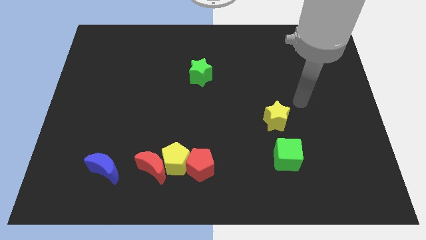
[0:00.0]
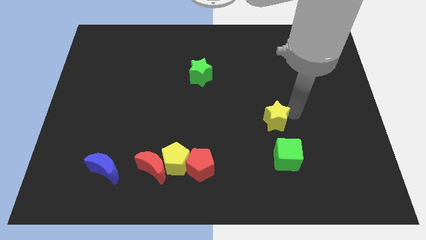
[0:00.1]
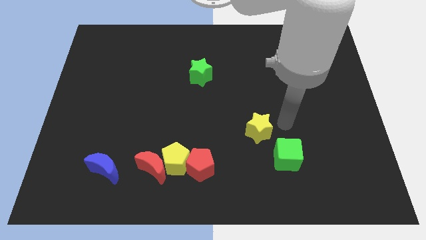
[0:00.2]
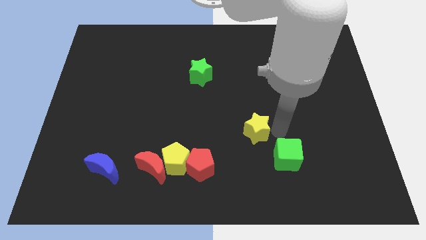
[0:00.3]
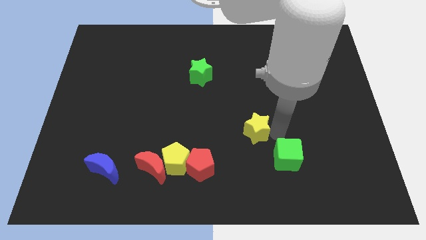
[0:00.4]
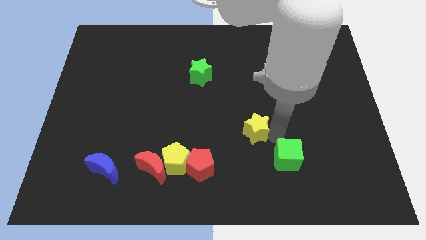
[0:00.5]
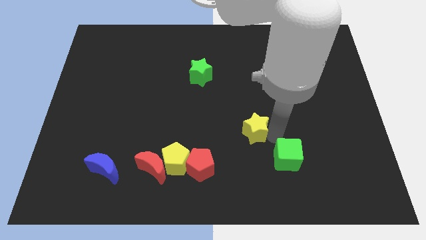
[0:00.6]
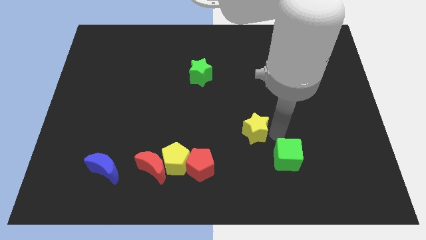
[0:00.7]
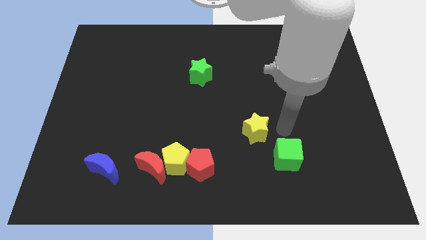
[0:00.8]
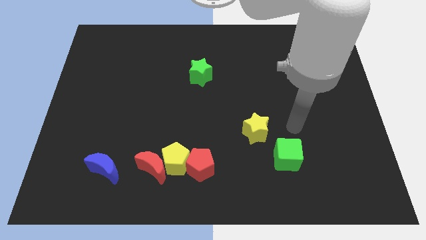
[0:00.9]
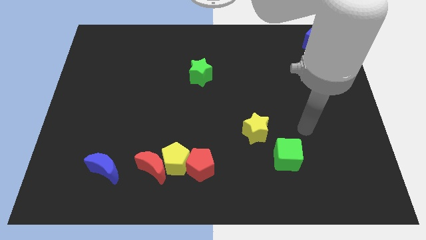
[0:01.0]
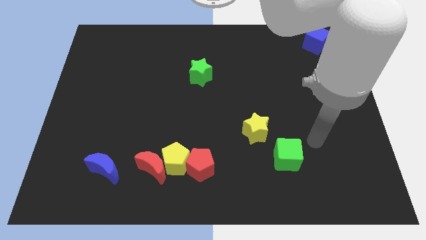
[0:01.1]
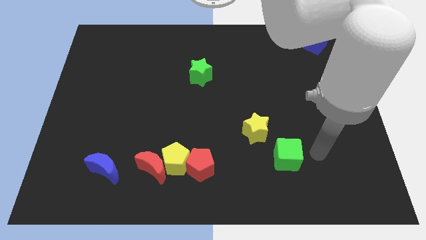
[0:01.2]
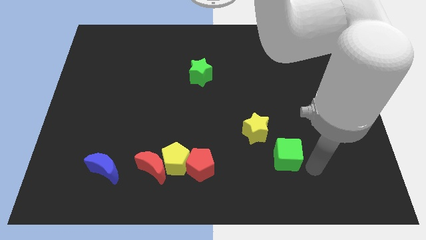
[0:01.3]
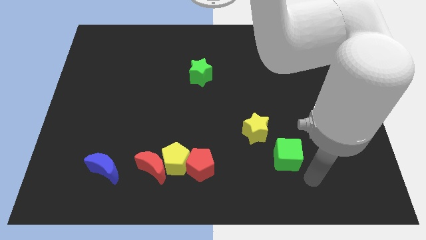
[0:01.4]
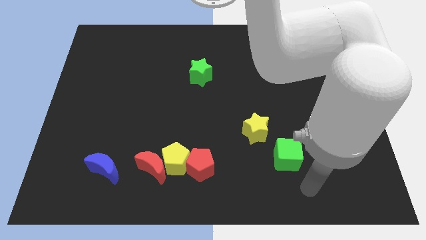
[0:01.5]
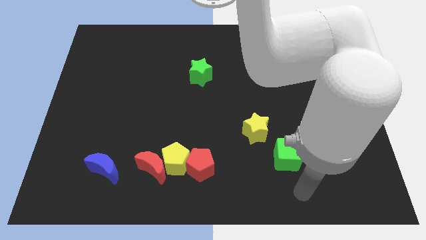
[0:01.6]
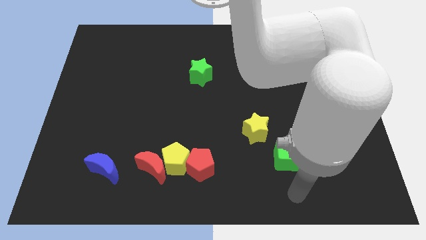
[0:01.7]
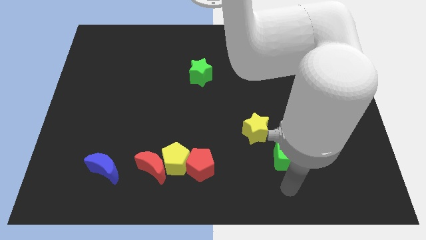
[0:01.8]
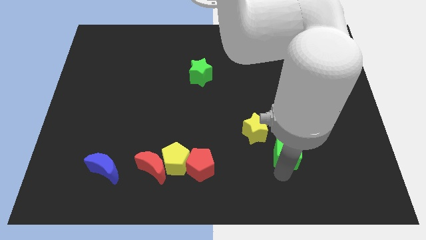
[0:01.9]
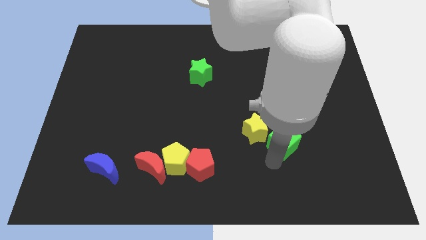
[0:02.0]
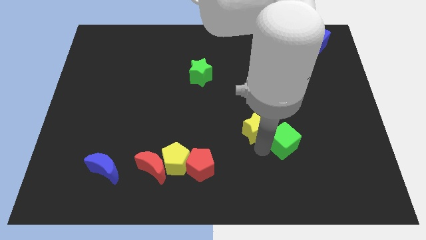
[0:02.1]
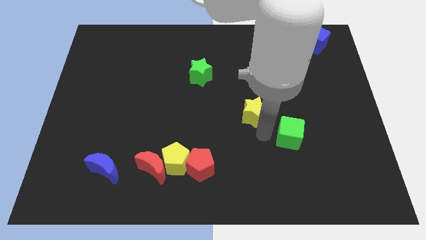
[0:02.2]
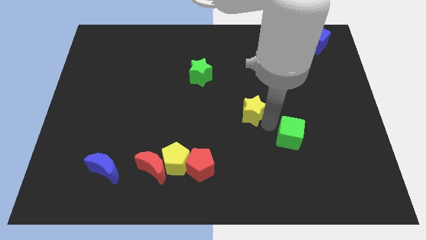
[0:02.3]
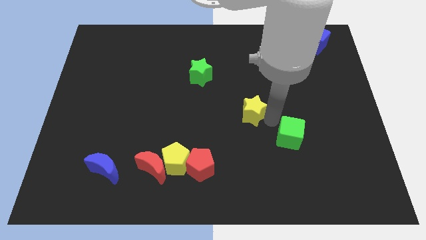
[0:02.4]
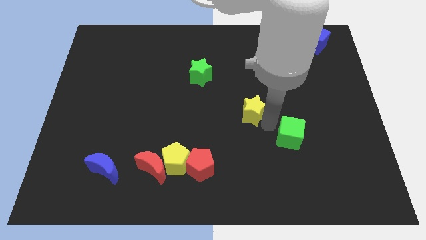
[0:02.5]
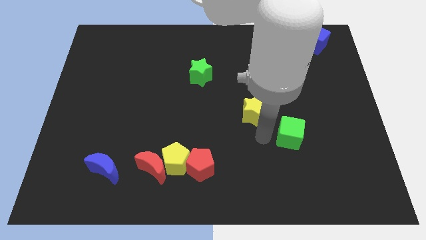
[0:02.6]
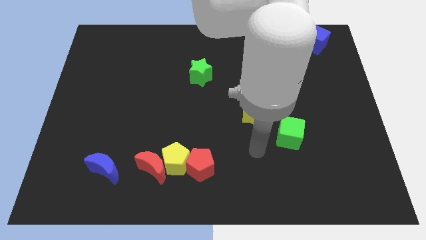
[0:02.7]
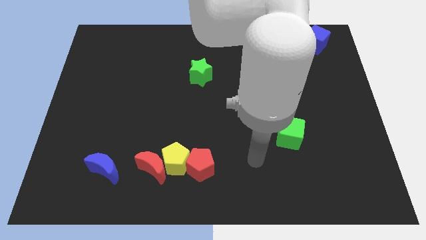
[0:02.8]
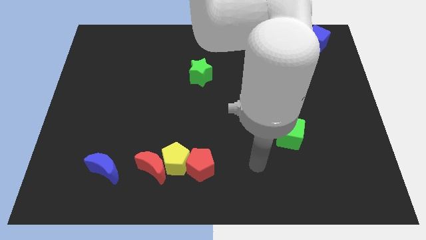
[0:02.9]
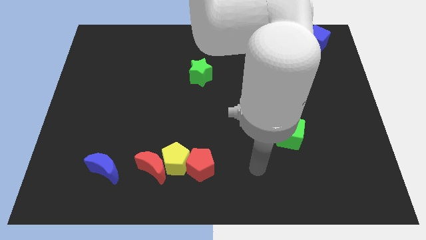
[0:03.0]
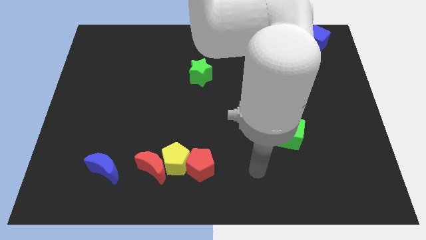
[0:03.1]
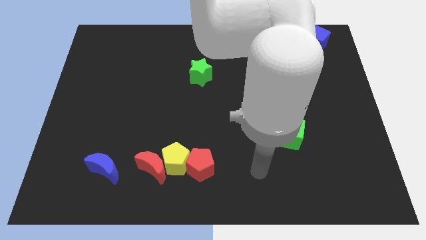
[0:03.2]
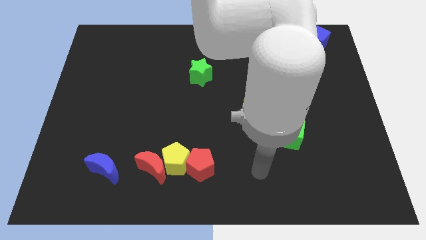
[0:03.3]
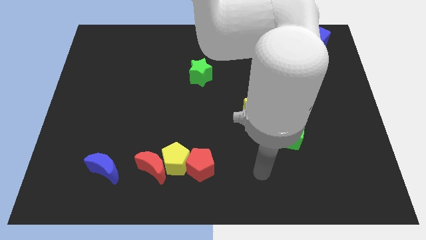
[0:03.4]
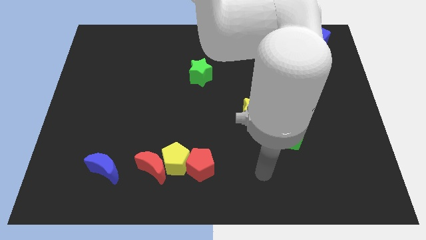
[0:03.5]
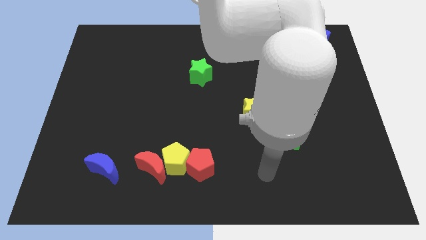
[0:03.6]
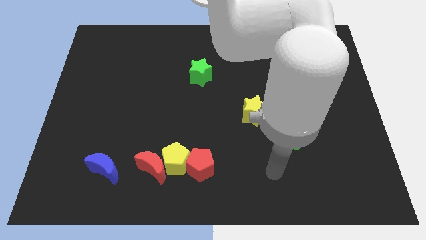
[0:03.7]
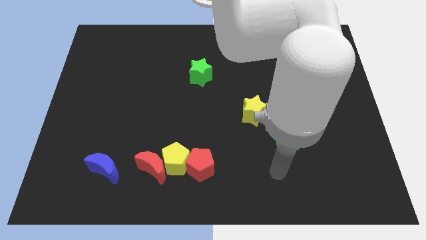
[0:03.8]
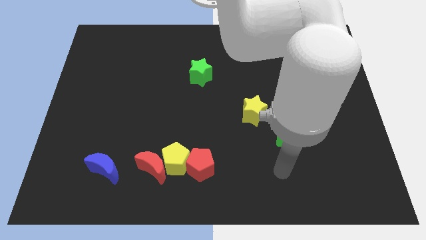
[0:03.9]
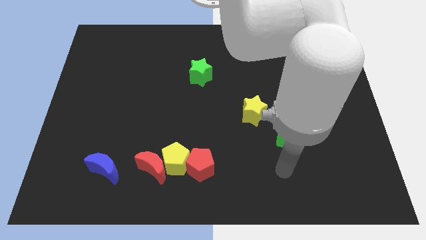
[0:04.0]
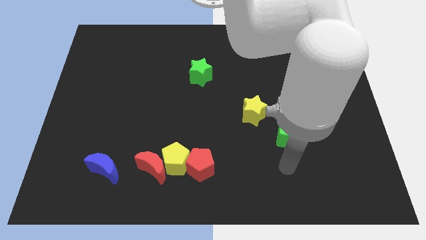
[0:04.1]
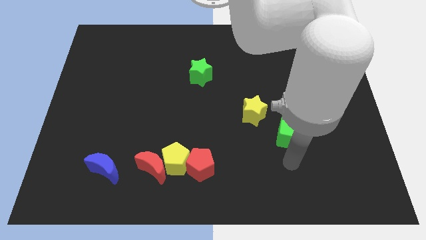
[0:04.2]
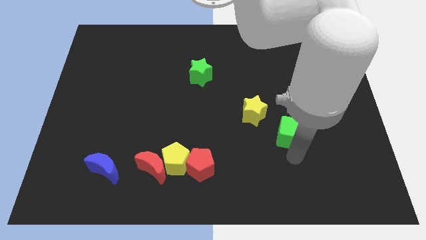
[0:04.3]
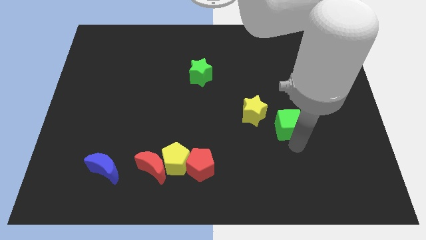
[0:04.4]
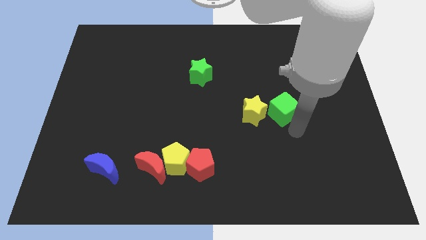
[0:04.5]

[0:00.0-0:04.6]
move green cube to the right of yellow star

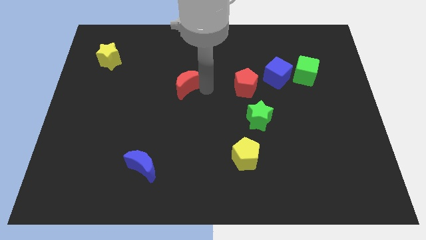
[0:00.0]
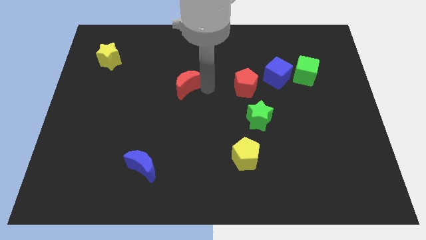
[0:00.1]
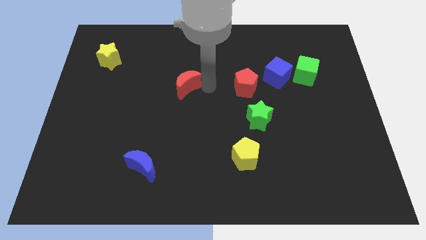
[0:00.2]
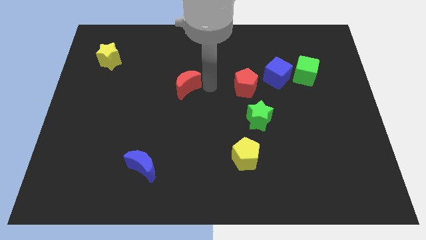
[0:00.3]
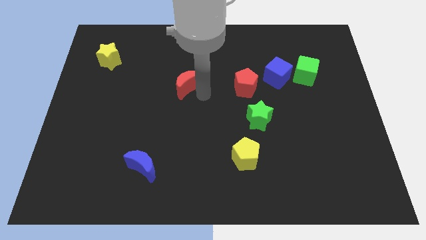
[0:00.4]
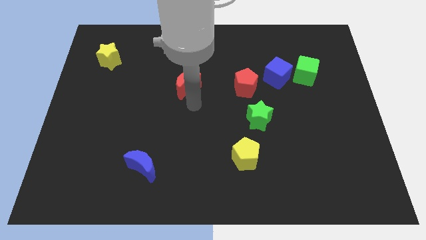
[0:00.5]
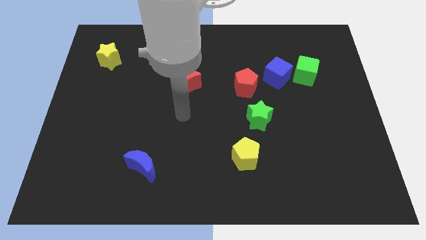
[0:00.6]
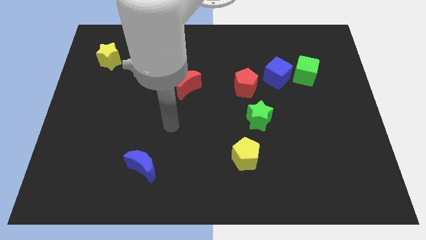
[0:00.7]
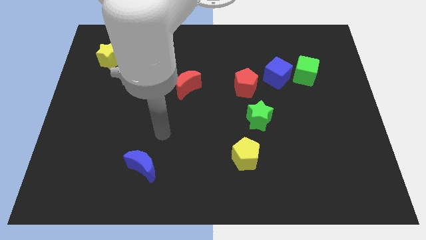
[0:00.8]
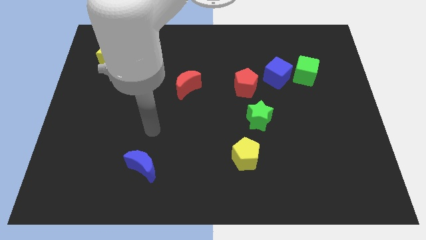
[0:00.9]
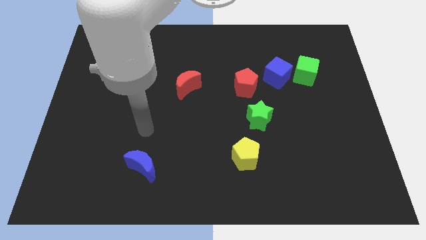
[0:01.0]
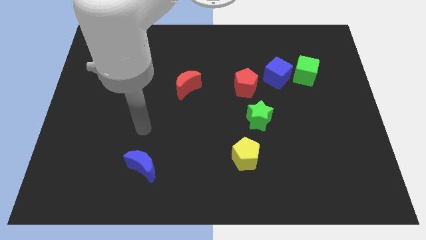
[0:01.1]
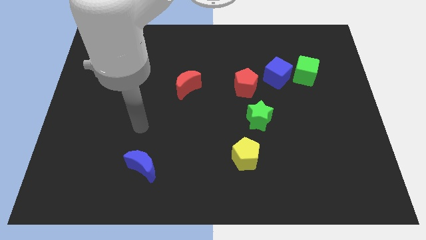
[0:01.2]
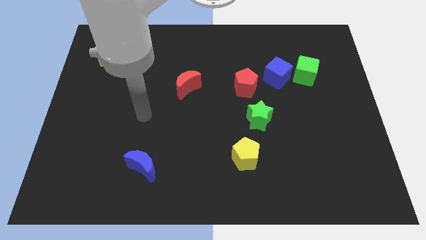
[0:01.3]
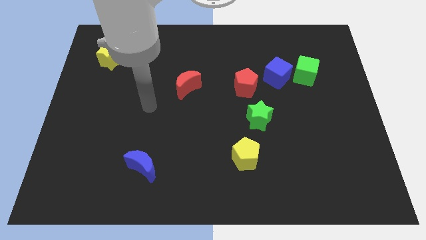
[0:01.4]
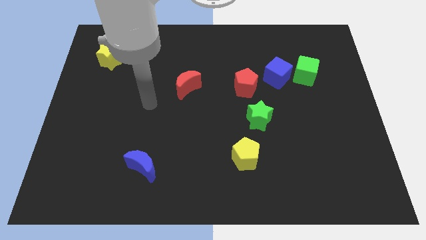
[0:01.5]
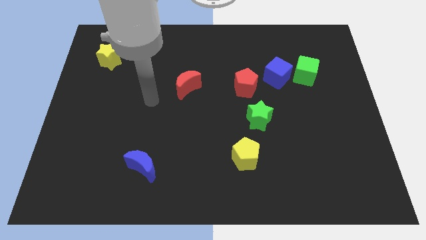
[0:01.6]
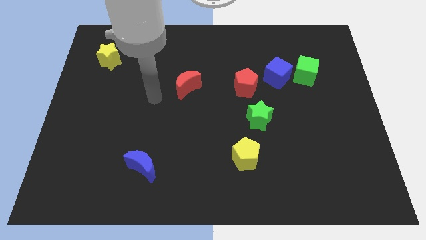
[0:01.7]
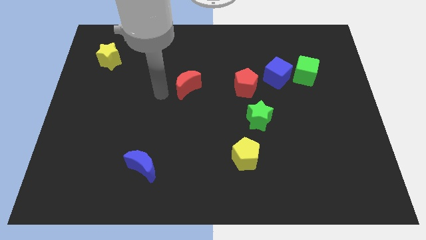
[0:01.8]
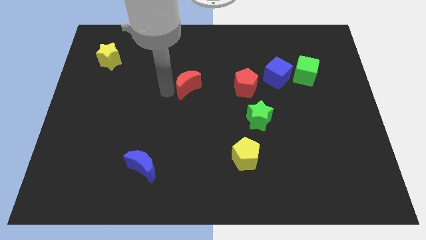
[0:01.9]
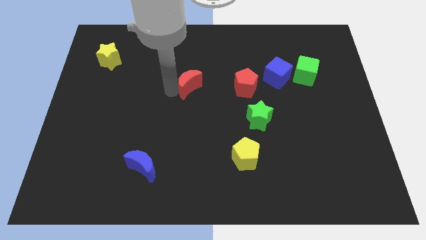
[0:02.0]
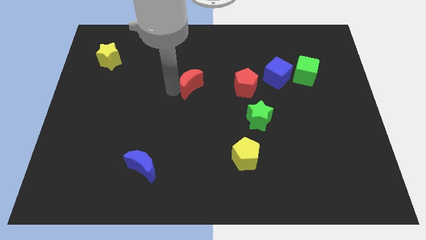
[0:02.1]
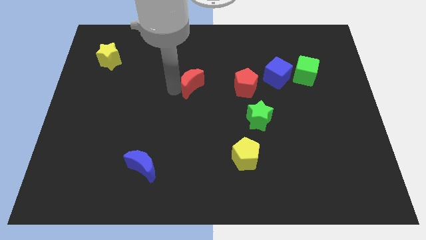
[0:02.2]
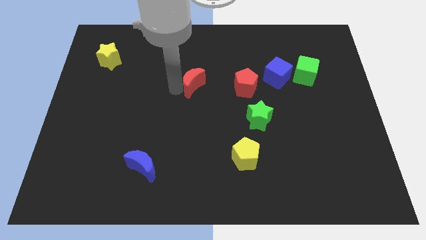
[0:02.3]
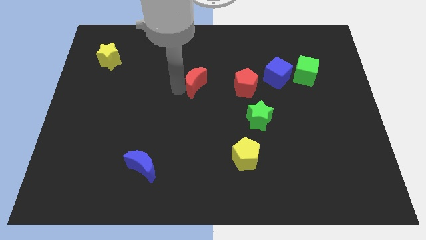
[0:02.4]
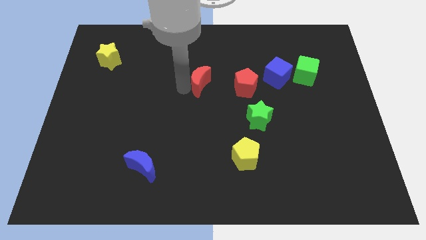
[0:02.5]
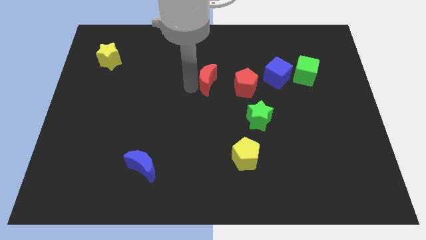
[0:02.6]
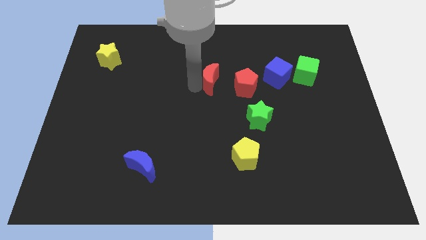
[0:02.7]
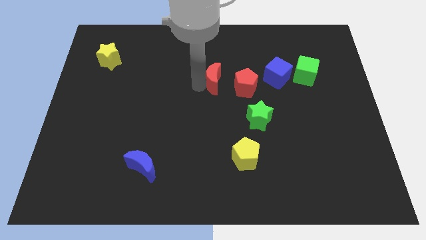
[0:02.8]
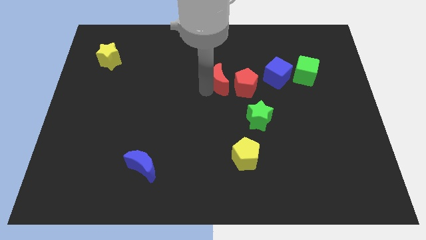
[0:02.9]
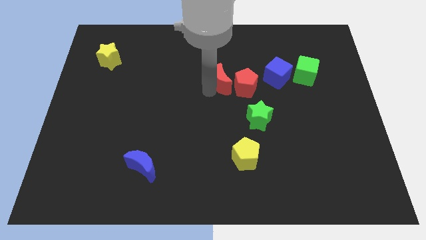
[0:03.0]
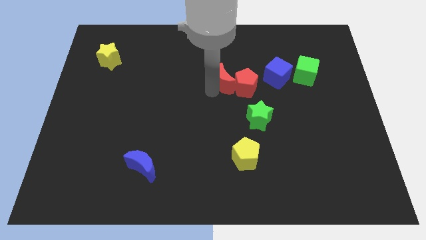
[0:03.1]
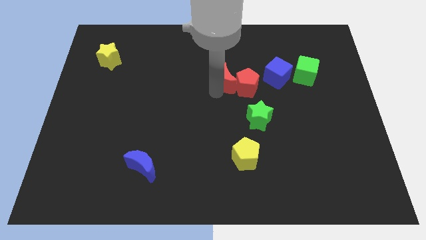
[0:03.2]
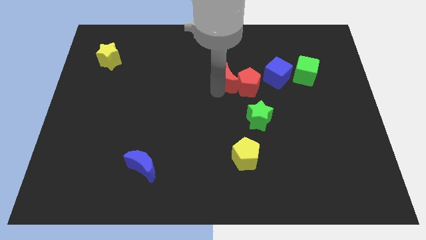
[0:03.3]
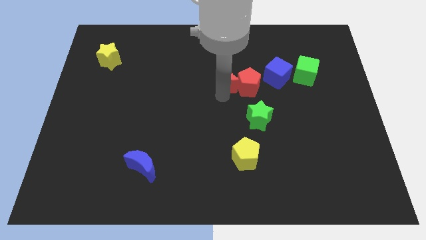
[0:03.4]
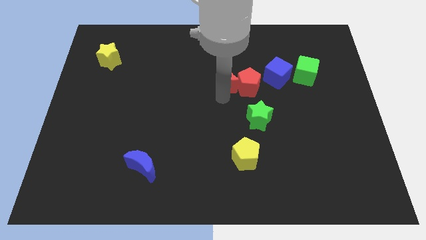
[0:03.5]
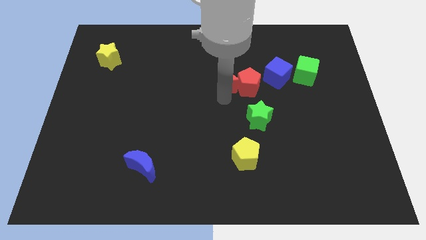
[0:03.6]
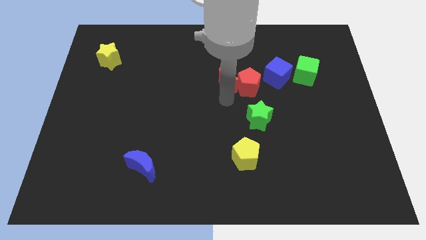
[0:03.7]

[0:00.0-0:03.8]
push the red crescent into the left of the red pentagon

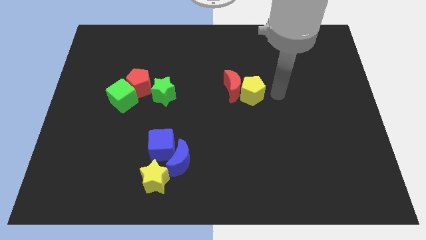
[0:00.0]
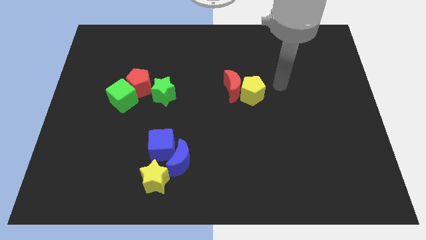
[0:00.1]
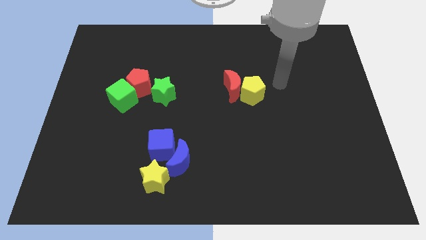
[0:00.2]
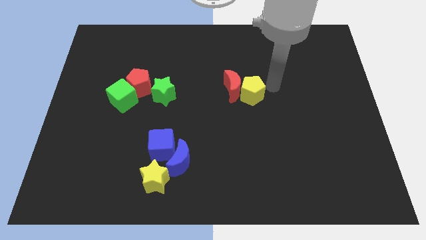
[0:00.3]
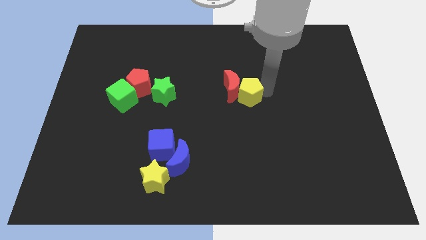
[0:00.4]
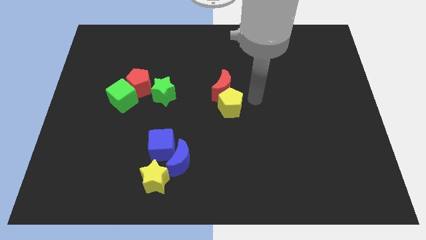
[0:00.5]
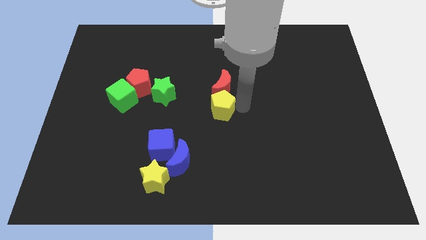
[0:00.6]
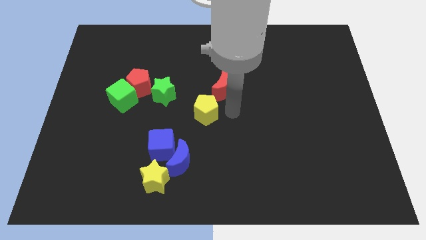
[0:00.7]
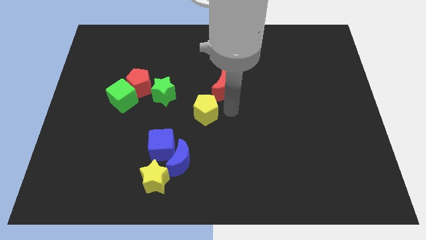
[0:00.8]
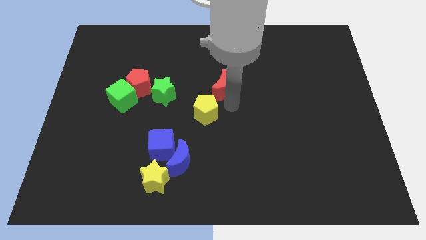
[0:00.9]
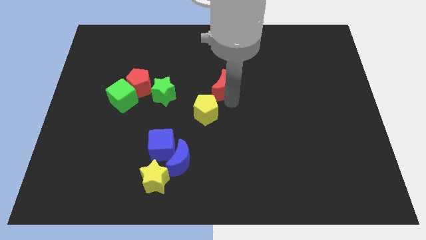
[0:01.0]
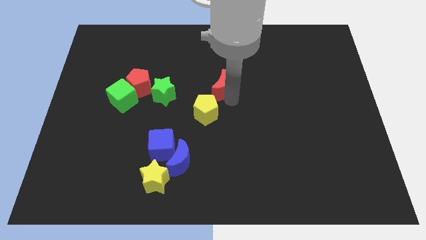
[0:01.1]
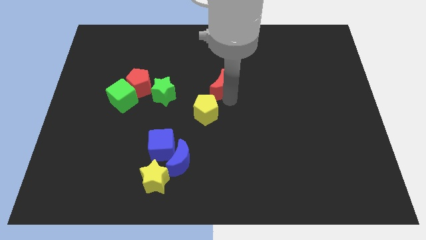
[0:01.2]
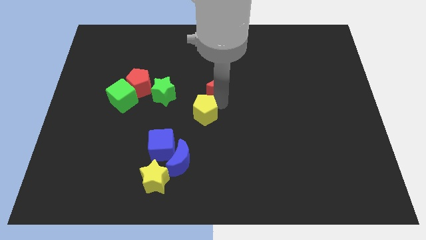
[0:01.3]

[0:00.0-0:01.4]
move the yellow pentagon to the bottom of the red crescent
